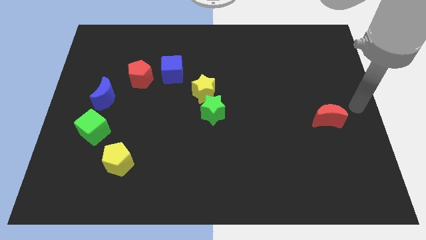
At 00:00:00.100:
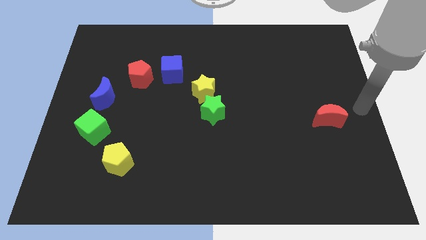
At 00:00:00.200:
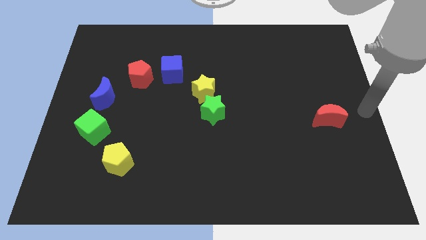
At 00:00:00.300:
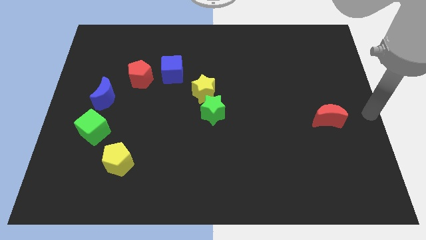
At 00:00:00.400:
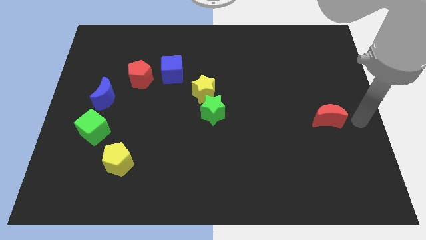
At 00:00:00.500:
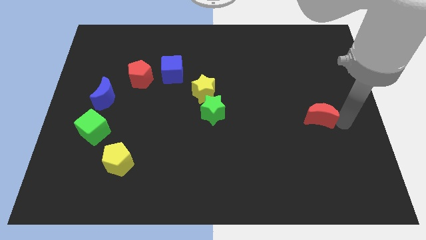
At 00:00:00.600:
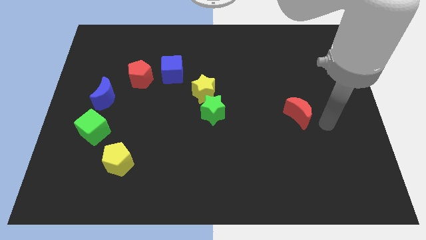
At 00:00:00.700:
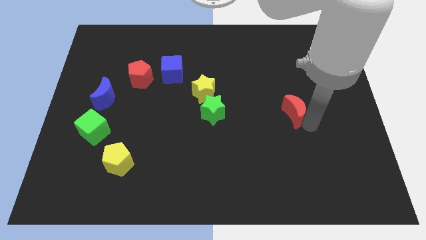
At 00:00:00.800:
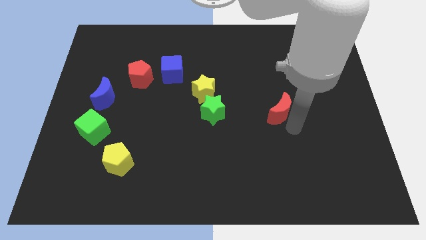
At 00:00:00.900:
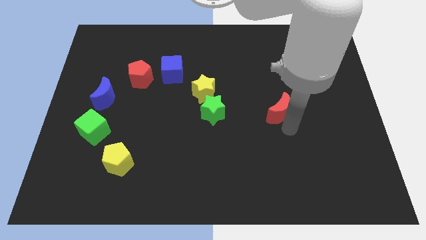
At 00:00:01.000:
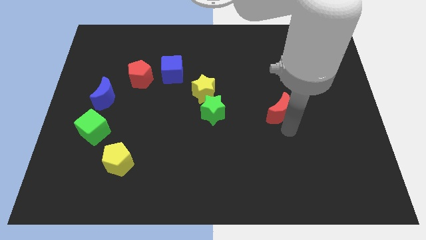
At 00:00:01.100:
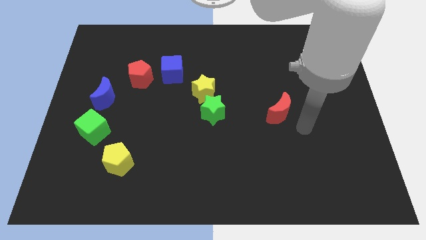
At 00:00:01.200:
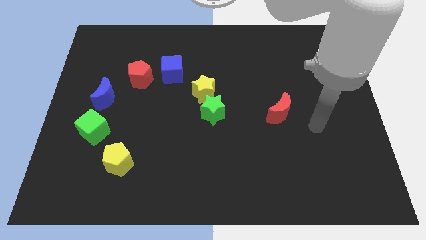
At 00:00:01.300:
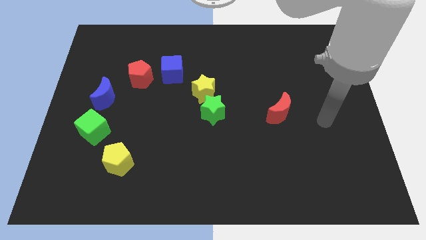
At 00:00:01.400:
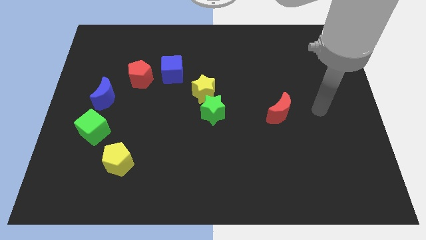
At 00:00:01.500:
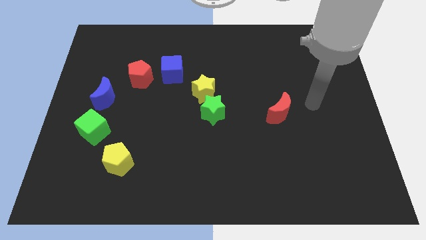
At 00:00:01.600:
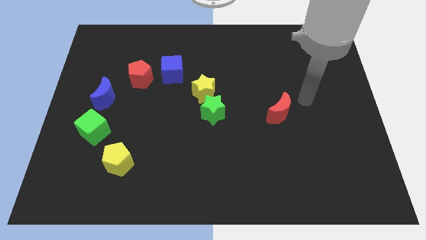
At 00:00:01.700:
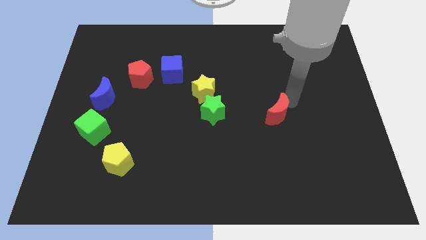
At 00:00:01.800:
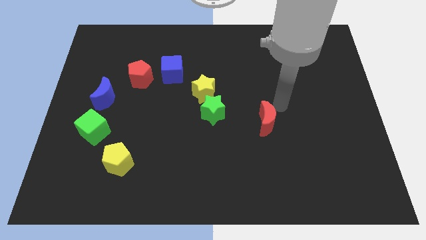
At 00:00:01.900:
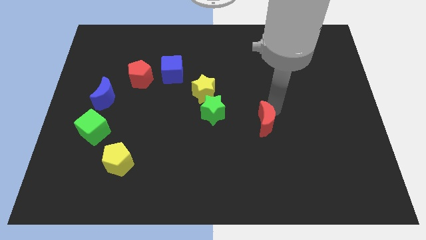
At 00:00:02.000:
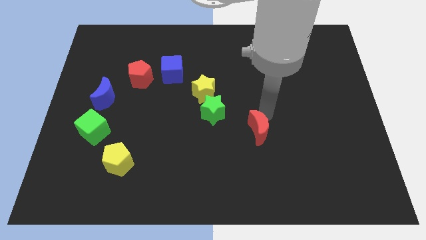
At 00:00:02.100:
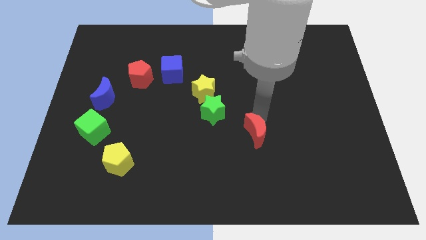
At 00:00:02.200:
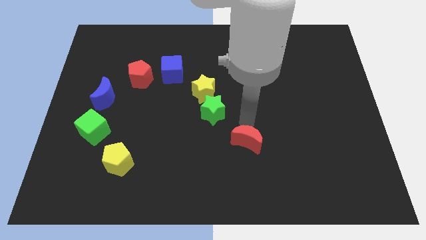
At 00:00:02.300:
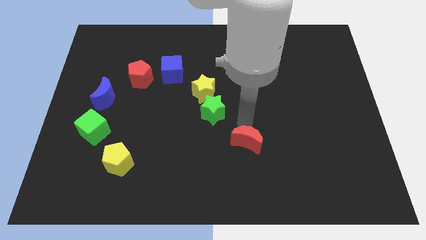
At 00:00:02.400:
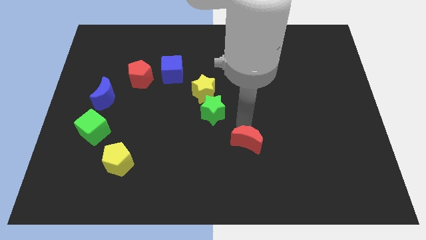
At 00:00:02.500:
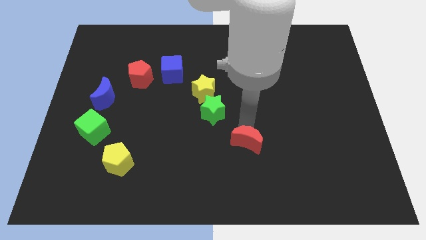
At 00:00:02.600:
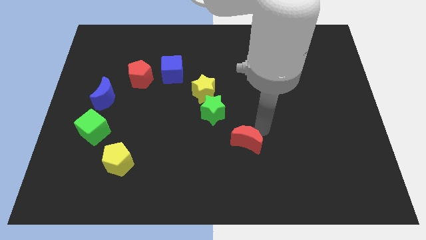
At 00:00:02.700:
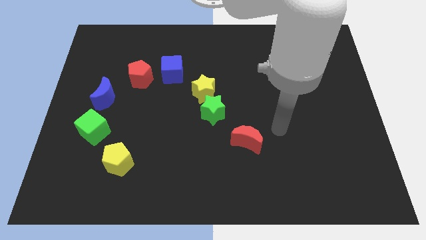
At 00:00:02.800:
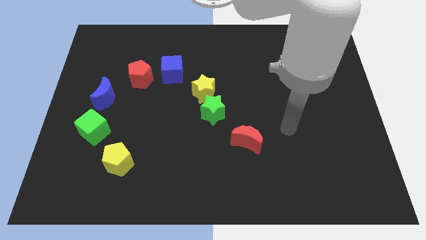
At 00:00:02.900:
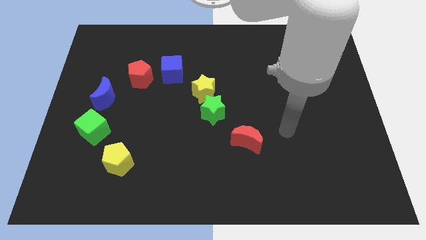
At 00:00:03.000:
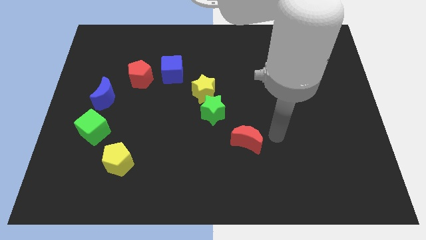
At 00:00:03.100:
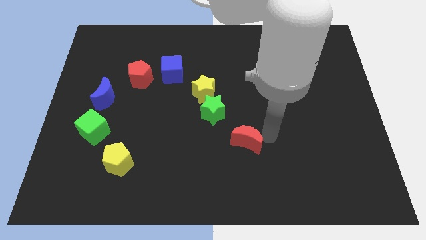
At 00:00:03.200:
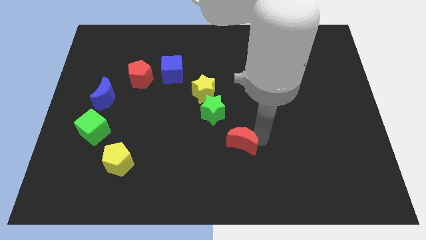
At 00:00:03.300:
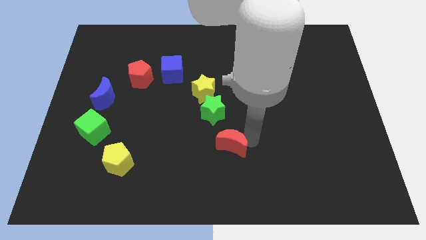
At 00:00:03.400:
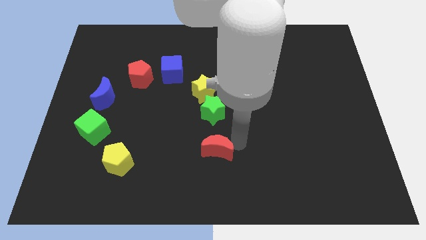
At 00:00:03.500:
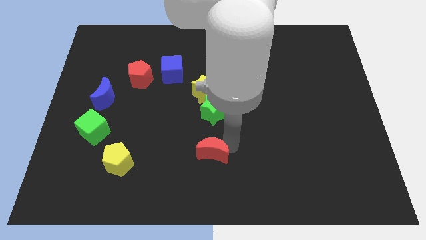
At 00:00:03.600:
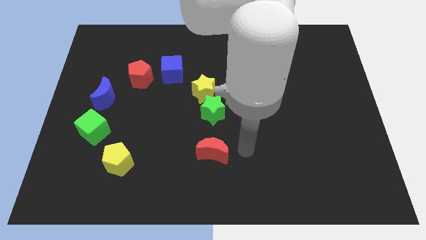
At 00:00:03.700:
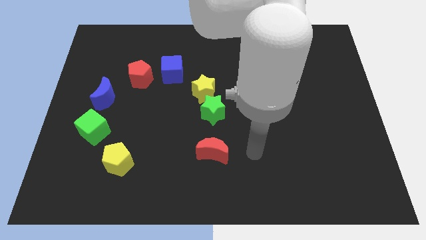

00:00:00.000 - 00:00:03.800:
move the red moon to the bottom side of the green star

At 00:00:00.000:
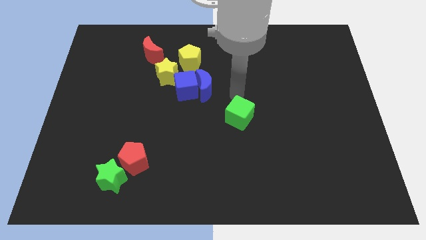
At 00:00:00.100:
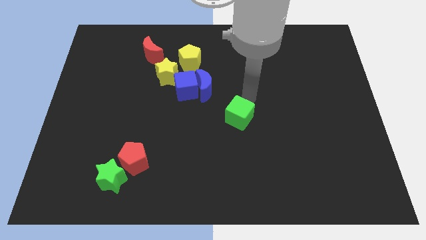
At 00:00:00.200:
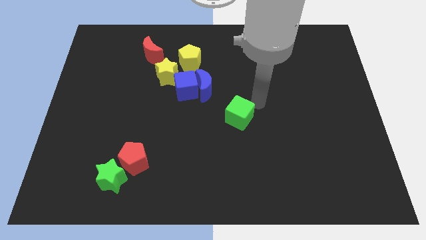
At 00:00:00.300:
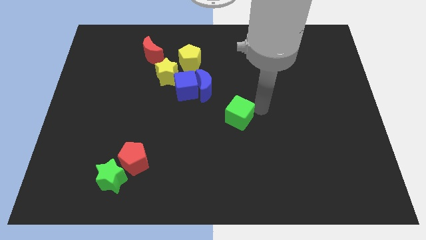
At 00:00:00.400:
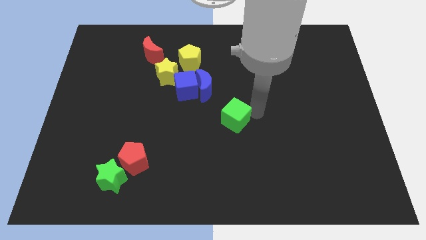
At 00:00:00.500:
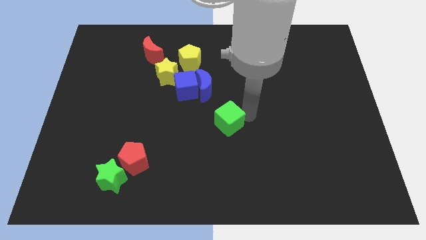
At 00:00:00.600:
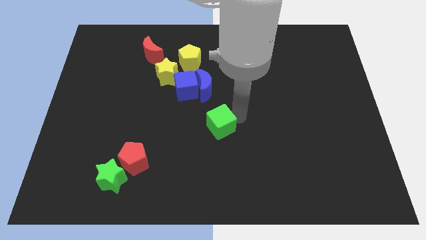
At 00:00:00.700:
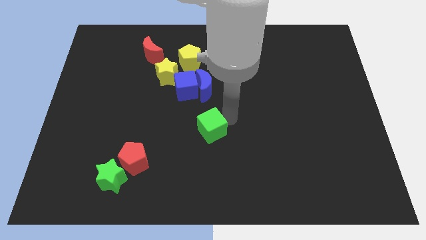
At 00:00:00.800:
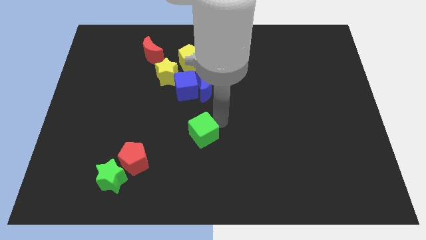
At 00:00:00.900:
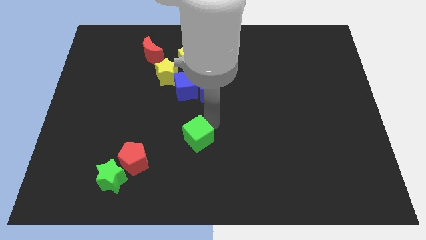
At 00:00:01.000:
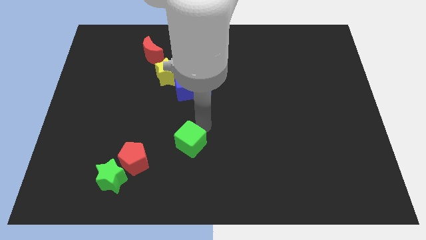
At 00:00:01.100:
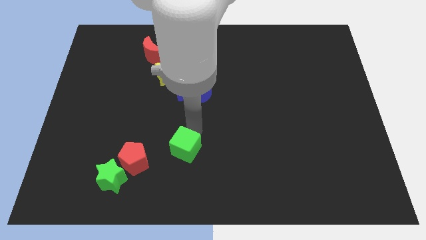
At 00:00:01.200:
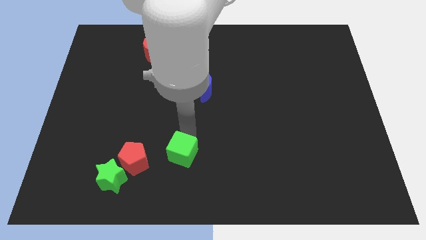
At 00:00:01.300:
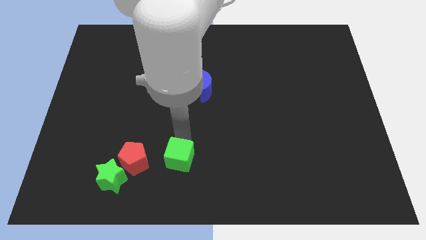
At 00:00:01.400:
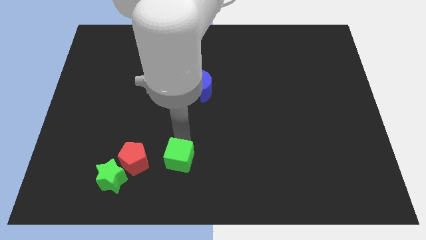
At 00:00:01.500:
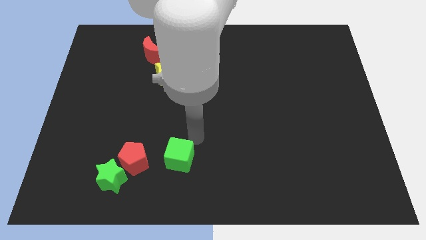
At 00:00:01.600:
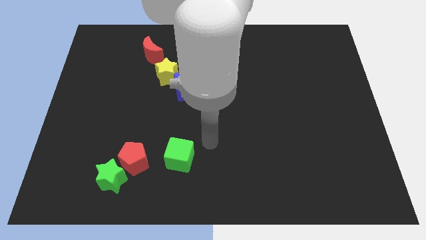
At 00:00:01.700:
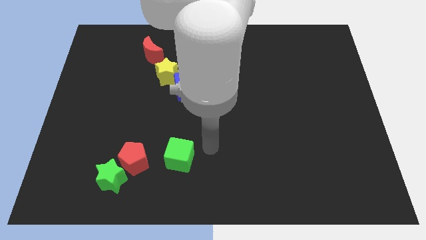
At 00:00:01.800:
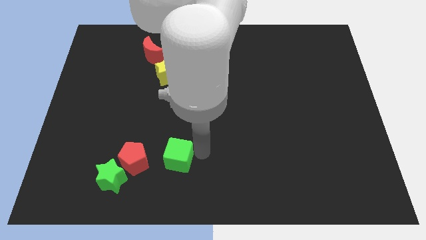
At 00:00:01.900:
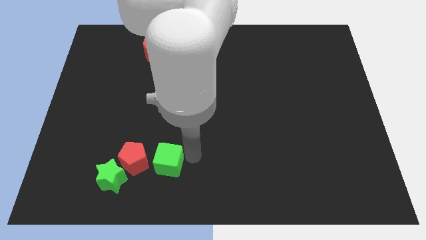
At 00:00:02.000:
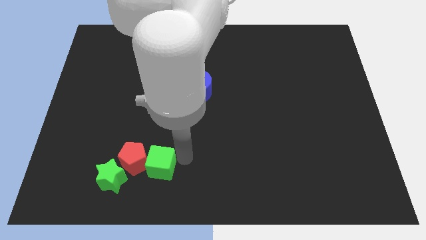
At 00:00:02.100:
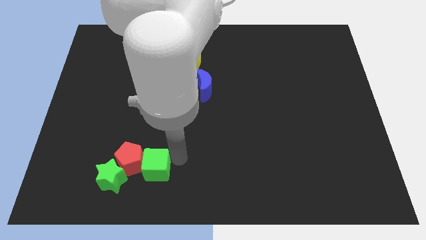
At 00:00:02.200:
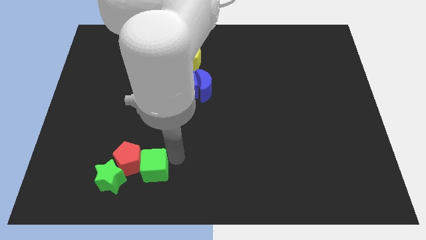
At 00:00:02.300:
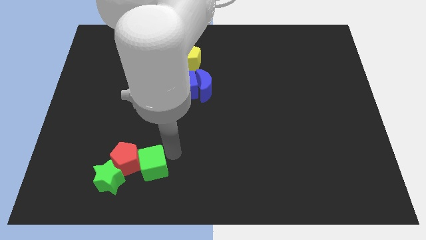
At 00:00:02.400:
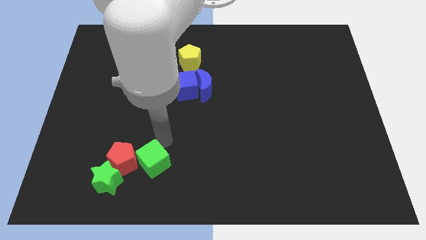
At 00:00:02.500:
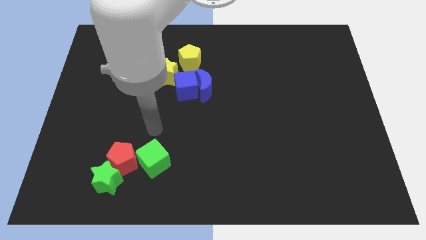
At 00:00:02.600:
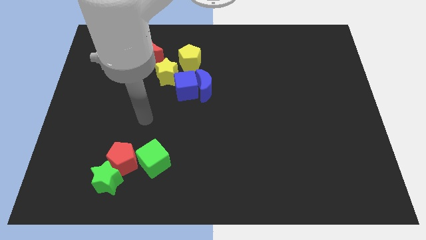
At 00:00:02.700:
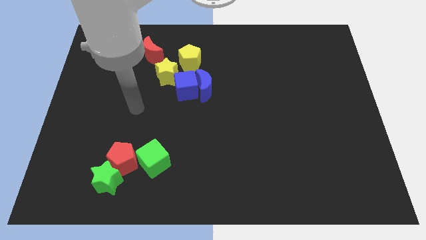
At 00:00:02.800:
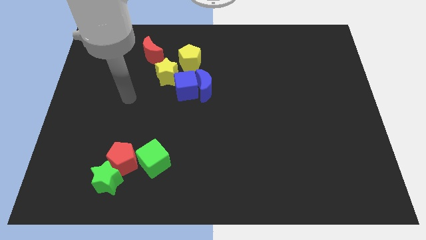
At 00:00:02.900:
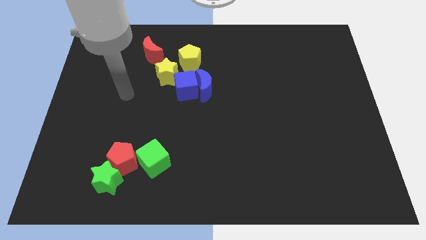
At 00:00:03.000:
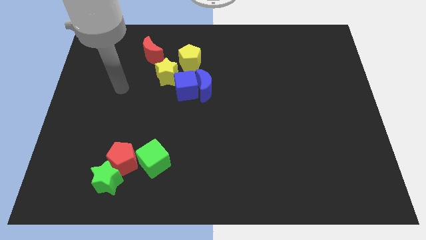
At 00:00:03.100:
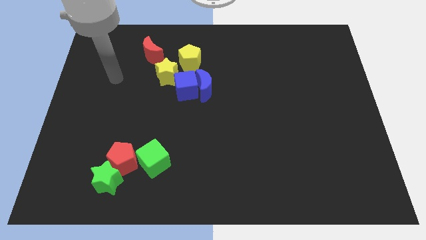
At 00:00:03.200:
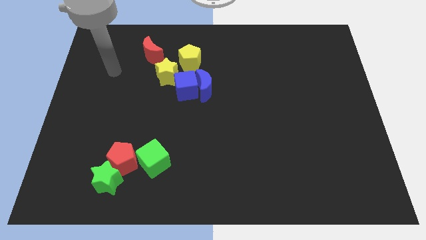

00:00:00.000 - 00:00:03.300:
push the green cube into the red pentagon

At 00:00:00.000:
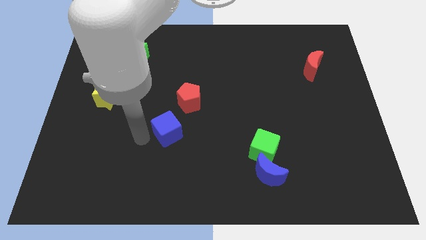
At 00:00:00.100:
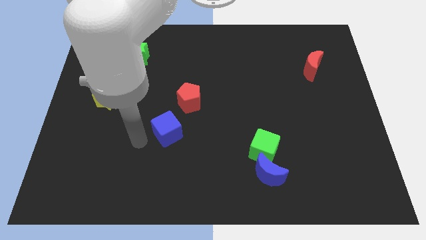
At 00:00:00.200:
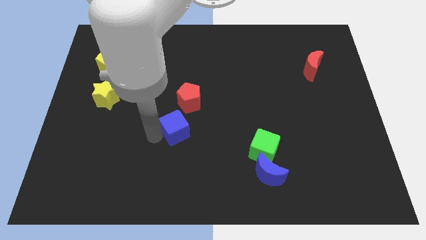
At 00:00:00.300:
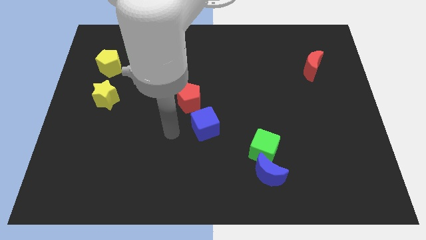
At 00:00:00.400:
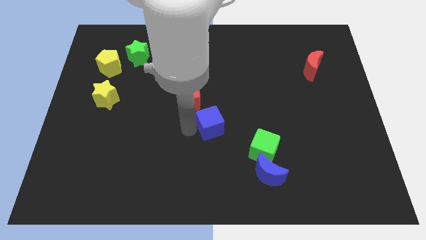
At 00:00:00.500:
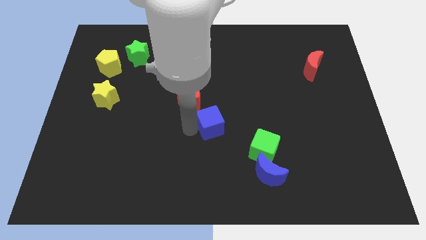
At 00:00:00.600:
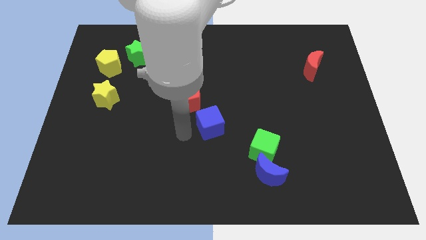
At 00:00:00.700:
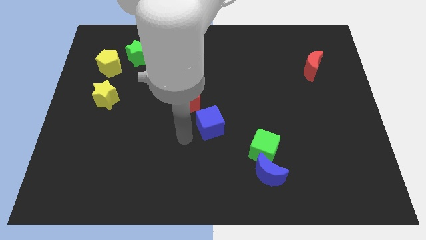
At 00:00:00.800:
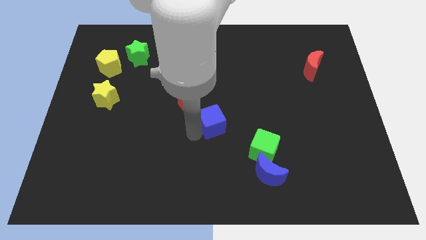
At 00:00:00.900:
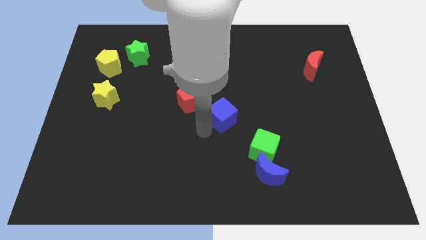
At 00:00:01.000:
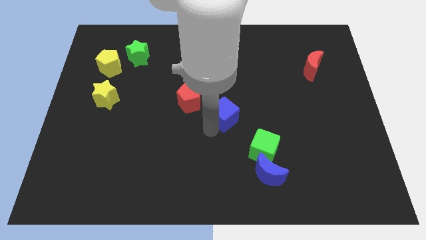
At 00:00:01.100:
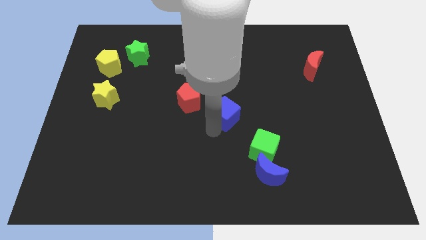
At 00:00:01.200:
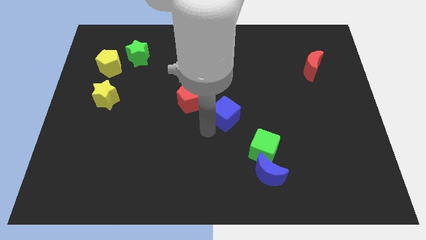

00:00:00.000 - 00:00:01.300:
put the blue cube diagonally bottom right to the red pentagon

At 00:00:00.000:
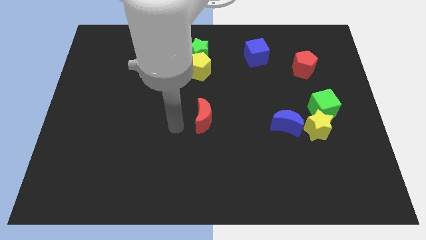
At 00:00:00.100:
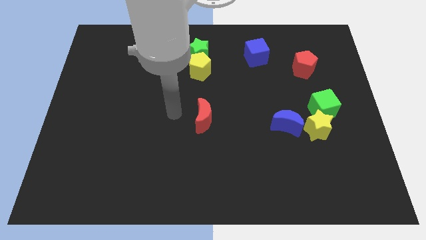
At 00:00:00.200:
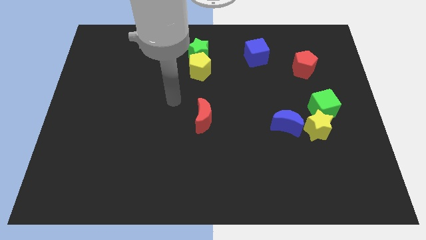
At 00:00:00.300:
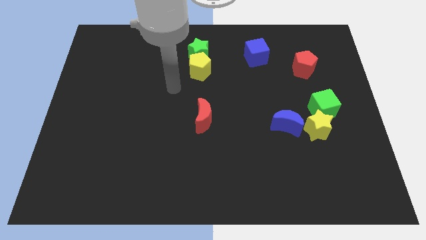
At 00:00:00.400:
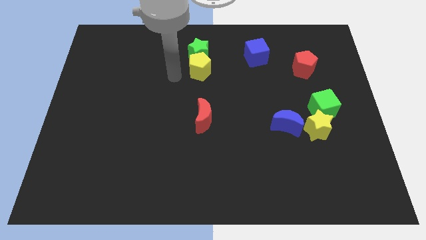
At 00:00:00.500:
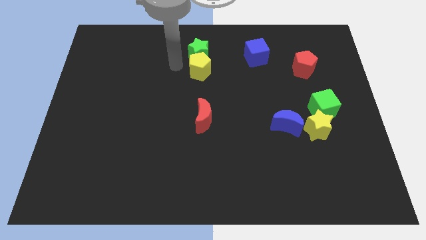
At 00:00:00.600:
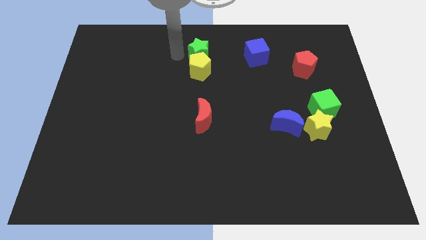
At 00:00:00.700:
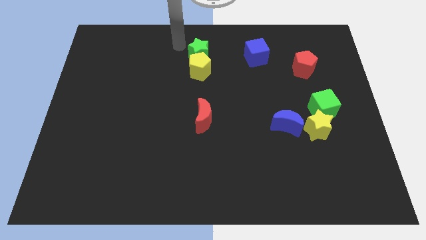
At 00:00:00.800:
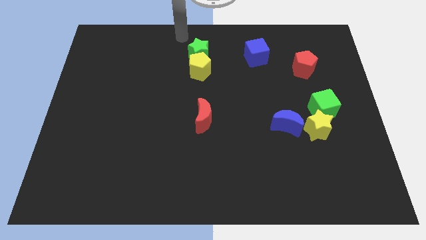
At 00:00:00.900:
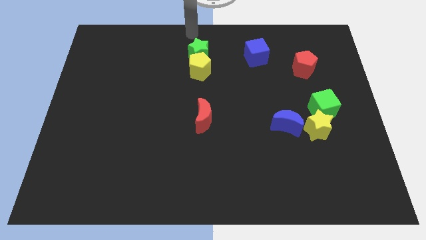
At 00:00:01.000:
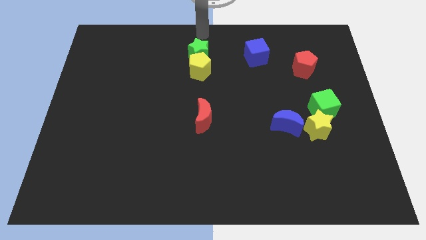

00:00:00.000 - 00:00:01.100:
place the arm at the top side of the green star
